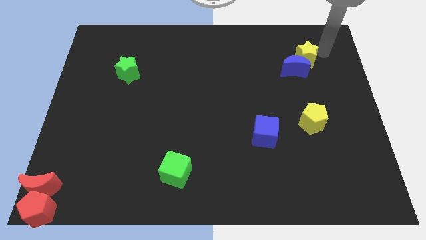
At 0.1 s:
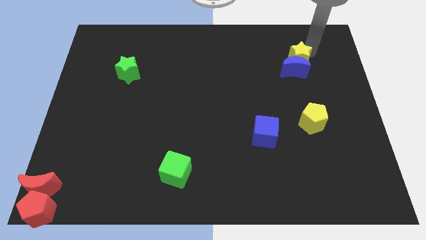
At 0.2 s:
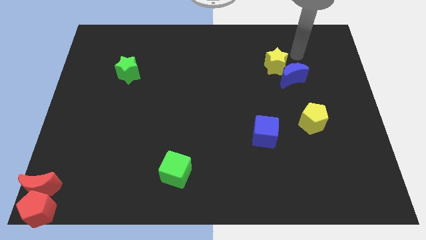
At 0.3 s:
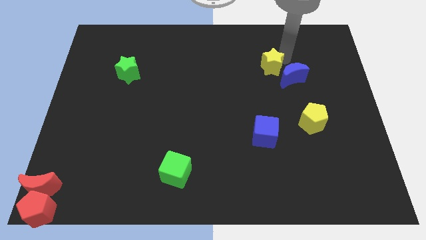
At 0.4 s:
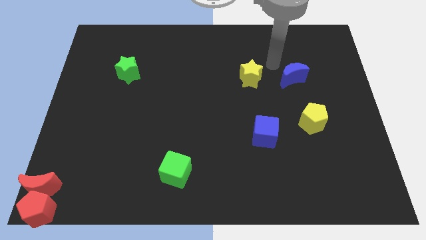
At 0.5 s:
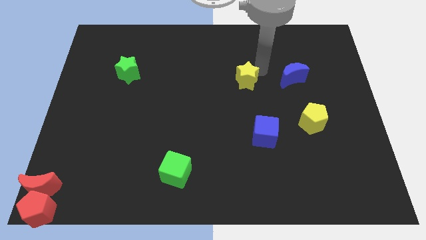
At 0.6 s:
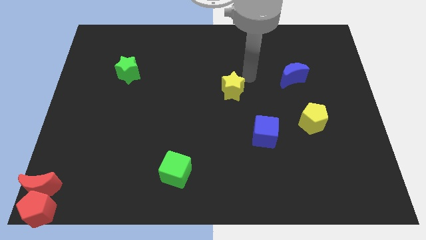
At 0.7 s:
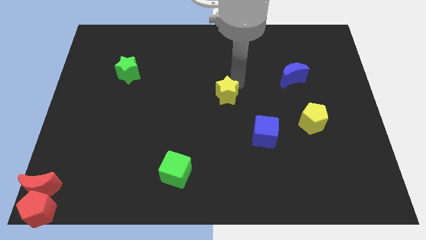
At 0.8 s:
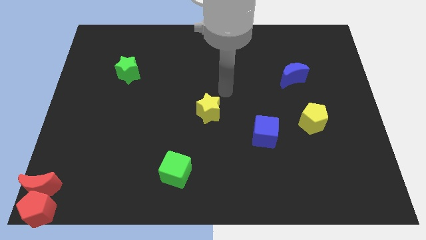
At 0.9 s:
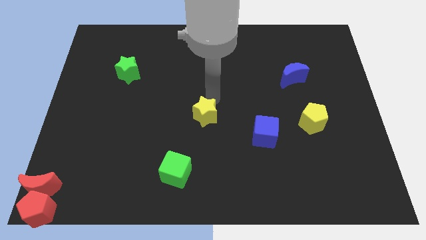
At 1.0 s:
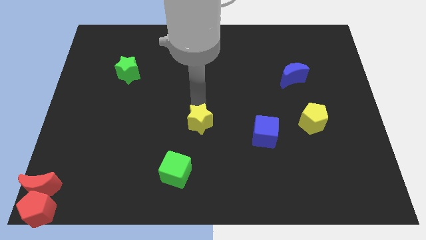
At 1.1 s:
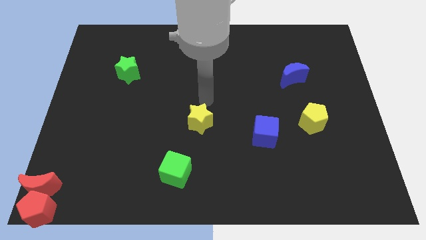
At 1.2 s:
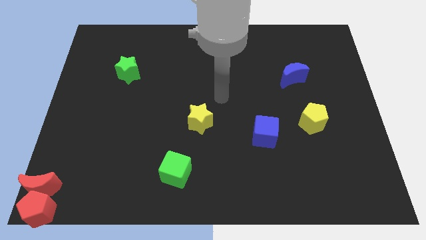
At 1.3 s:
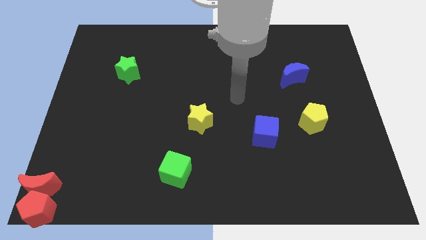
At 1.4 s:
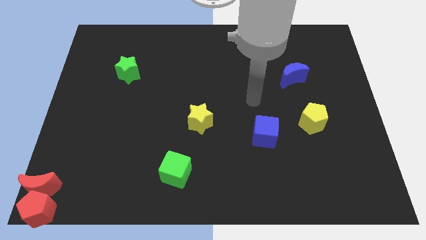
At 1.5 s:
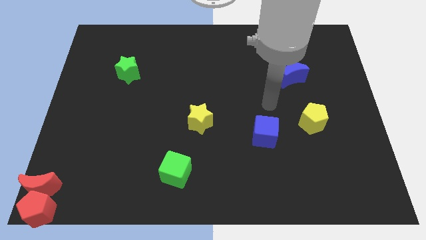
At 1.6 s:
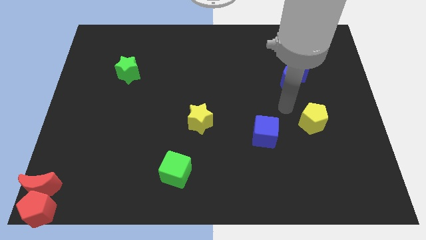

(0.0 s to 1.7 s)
place the yellow star to the center

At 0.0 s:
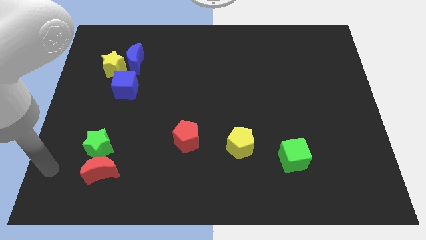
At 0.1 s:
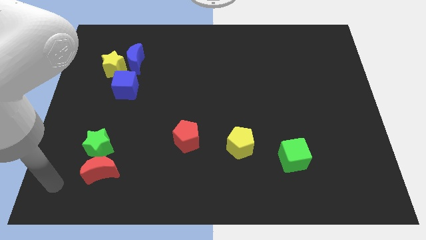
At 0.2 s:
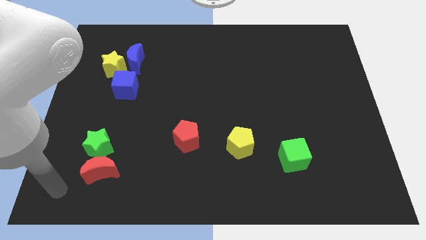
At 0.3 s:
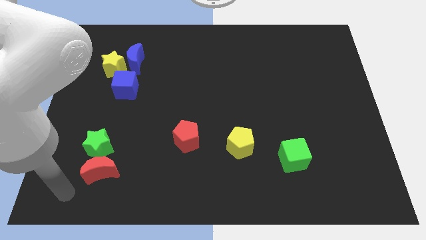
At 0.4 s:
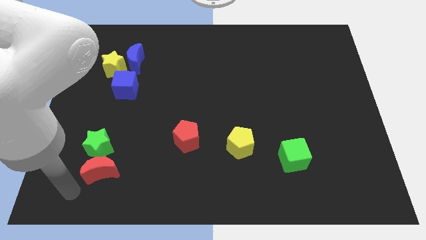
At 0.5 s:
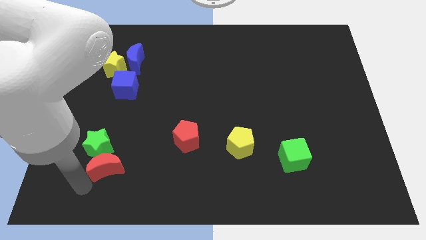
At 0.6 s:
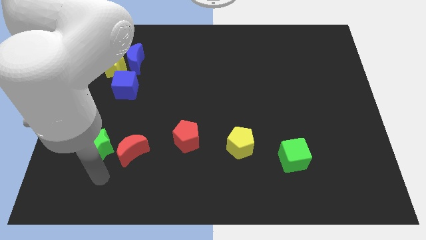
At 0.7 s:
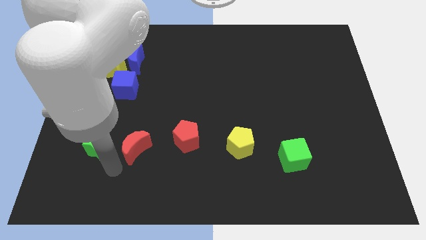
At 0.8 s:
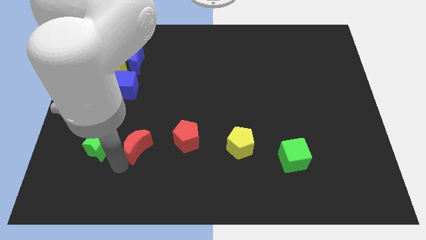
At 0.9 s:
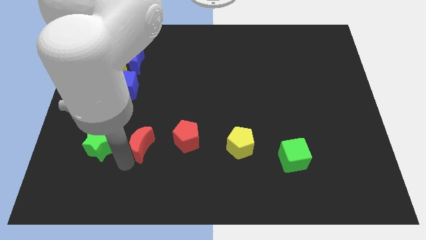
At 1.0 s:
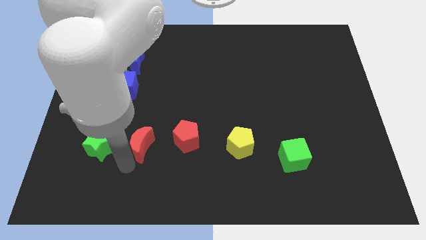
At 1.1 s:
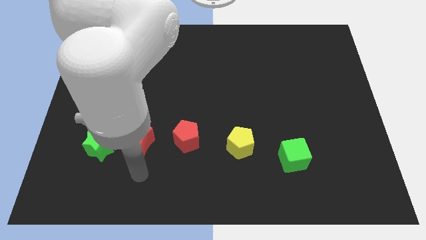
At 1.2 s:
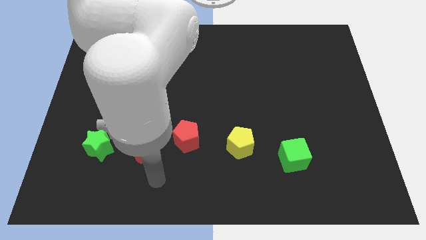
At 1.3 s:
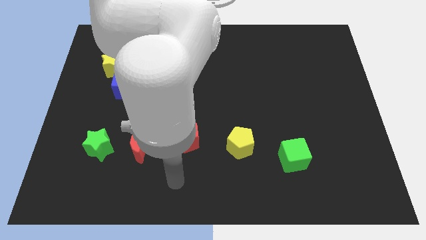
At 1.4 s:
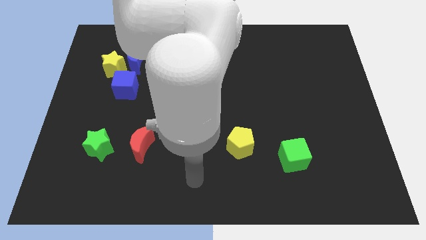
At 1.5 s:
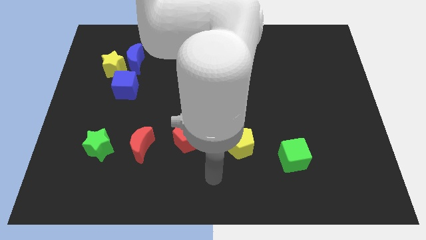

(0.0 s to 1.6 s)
slide the red moon to the right side of the green star

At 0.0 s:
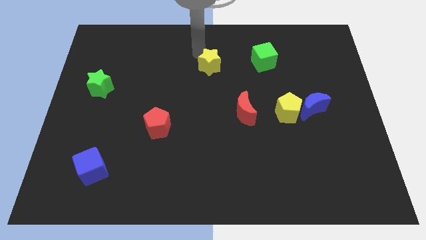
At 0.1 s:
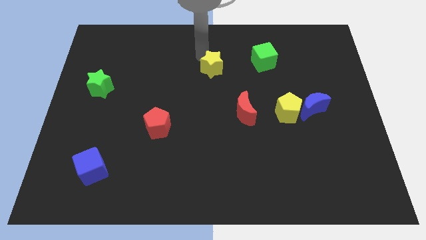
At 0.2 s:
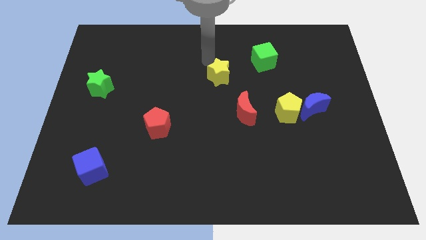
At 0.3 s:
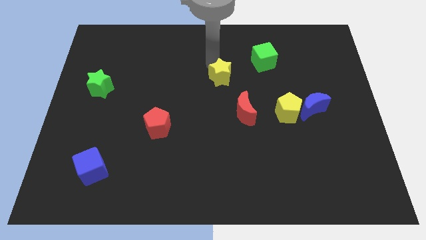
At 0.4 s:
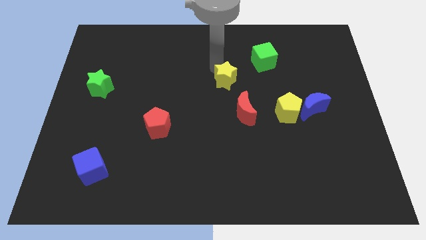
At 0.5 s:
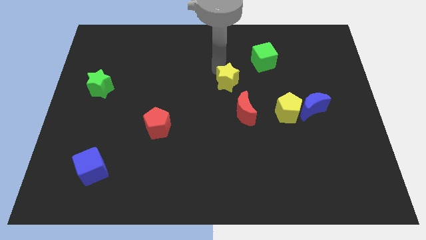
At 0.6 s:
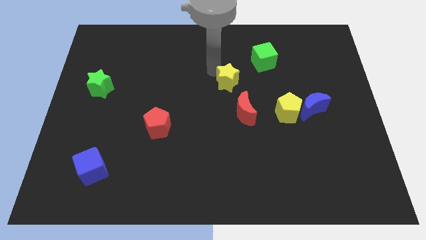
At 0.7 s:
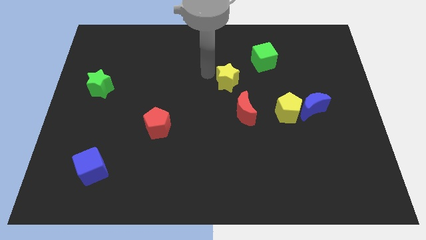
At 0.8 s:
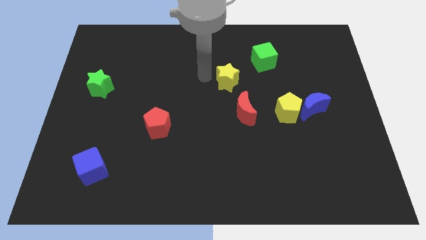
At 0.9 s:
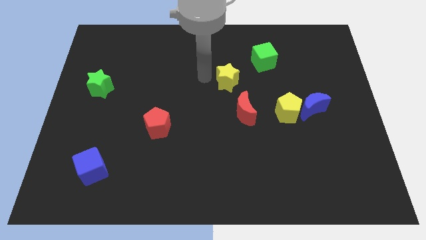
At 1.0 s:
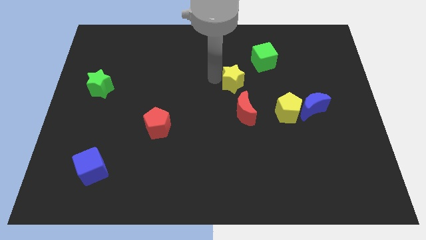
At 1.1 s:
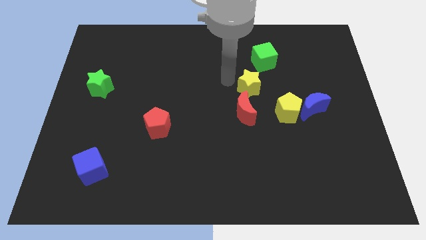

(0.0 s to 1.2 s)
place the yellow star vertically above the red moon

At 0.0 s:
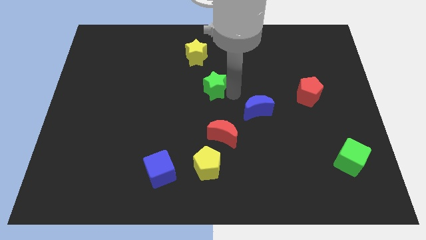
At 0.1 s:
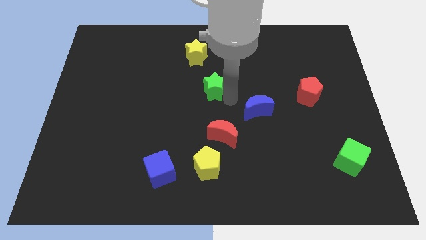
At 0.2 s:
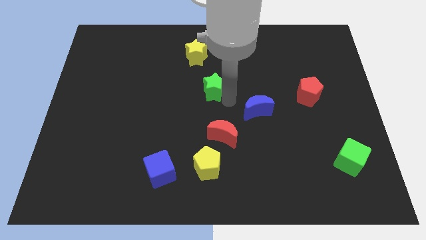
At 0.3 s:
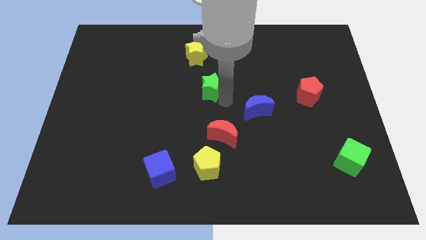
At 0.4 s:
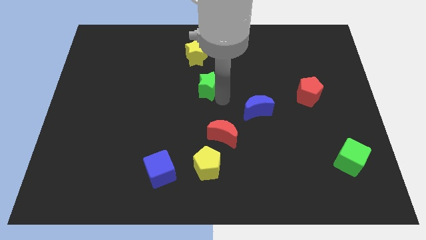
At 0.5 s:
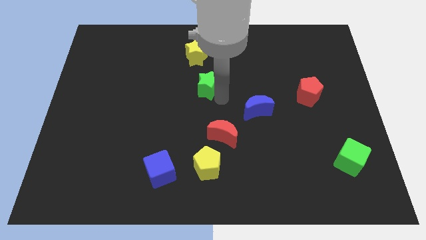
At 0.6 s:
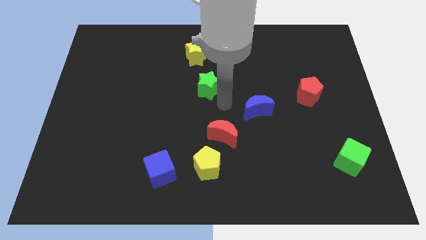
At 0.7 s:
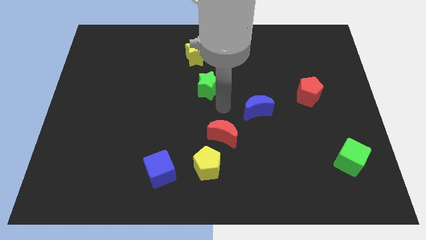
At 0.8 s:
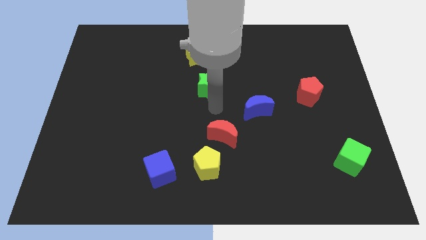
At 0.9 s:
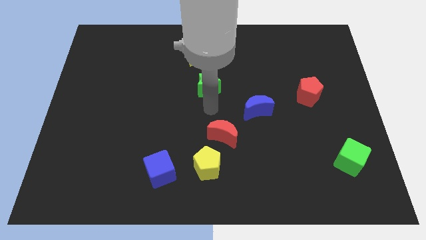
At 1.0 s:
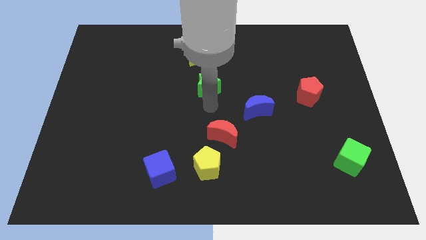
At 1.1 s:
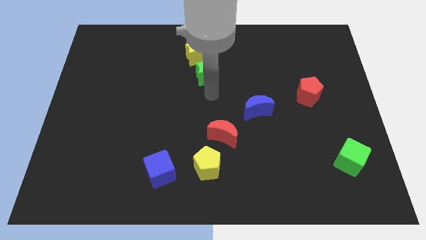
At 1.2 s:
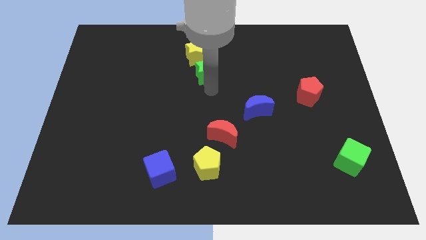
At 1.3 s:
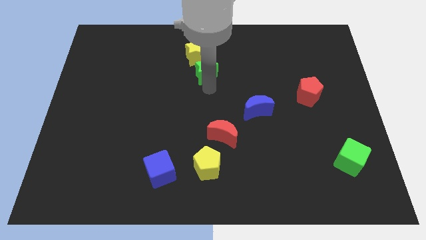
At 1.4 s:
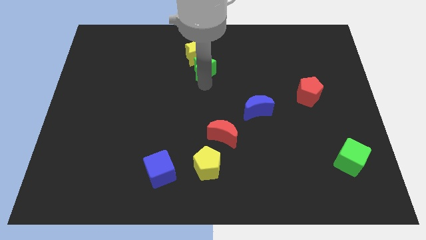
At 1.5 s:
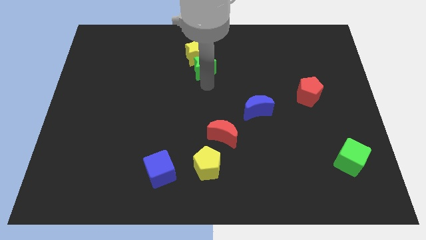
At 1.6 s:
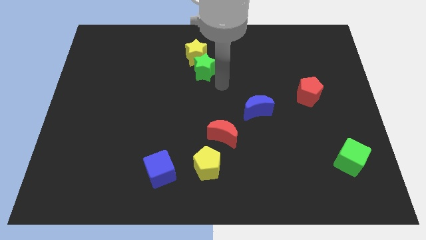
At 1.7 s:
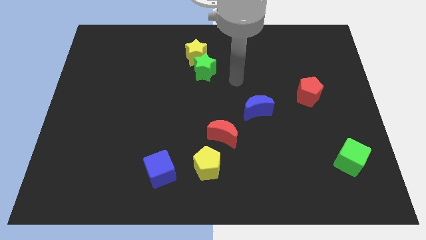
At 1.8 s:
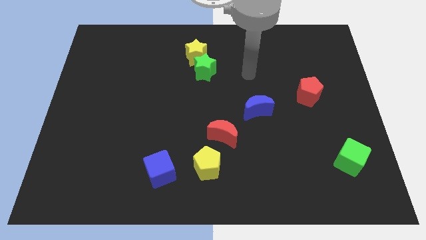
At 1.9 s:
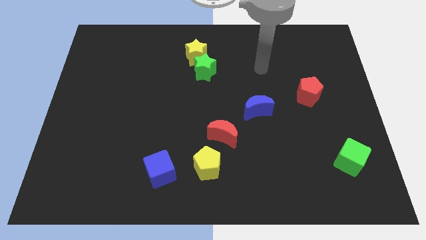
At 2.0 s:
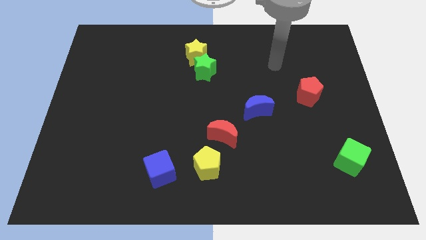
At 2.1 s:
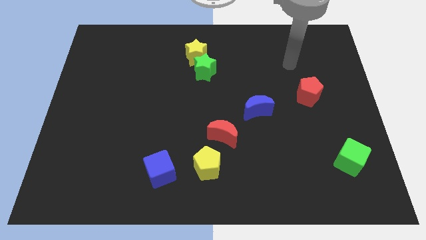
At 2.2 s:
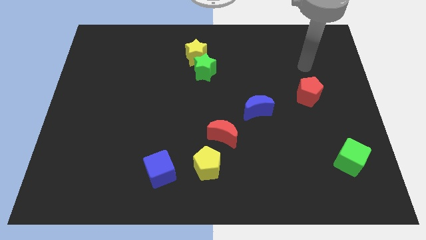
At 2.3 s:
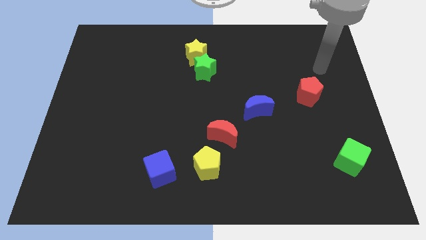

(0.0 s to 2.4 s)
push the green star close to yellow star

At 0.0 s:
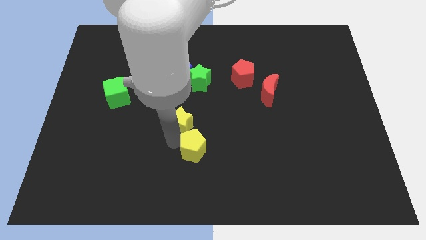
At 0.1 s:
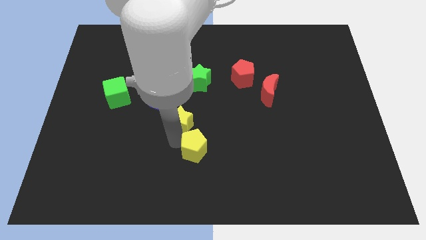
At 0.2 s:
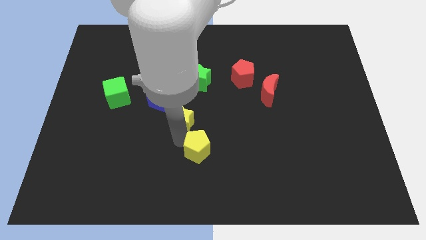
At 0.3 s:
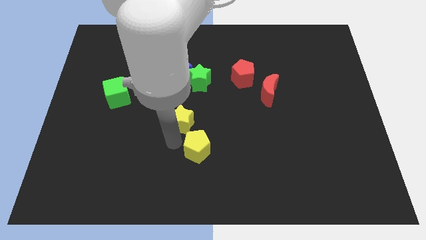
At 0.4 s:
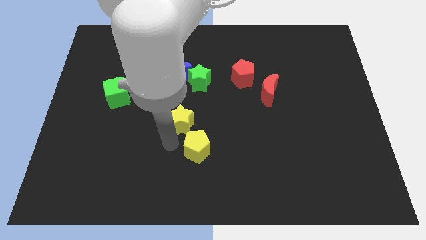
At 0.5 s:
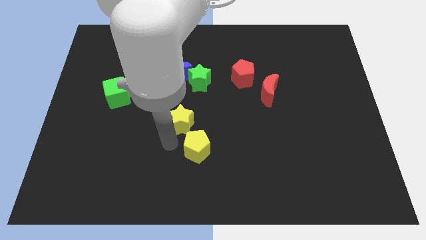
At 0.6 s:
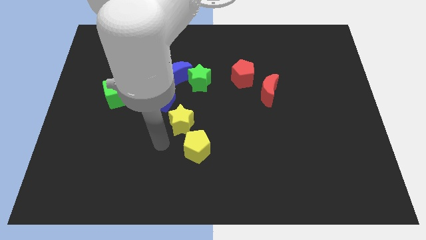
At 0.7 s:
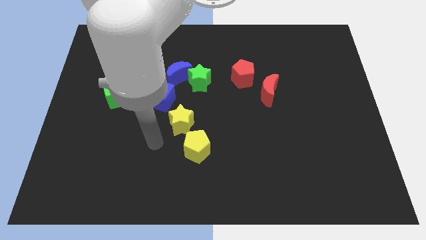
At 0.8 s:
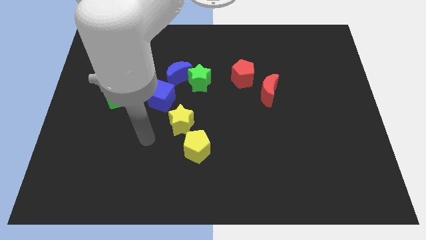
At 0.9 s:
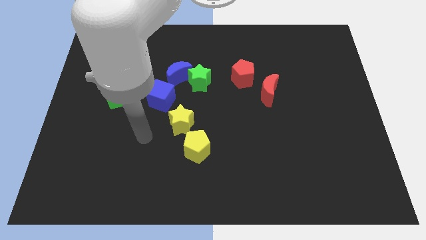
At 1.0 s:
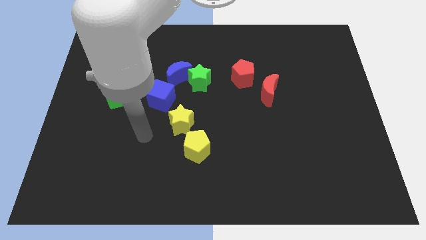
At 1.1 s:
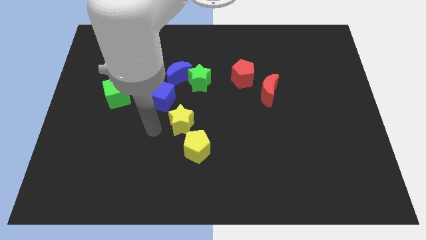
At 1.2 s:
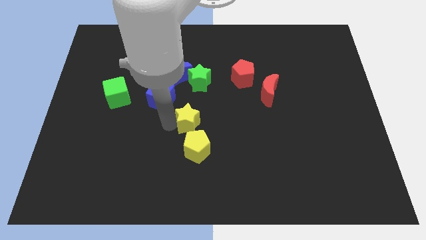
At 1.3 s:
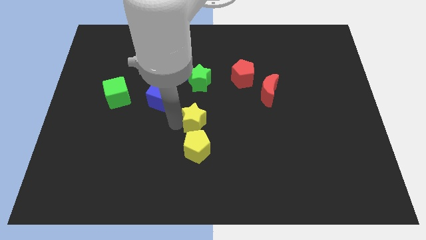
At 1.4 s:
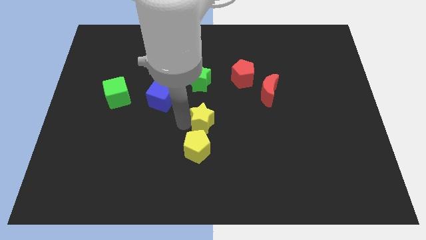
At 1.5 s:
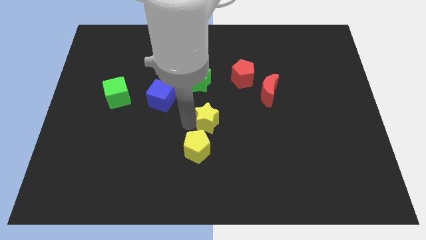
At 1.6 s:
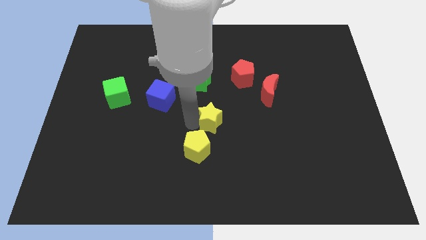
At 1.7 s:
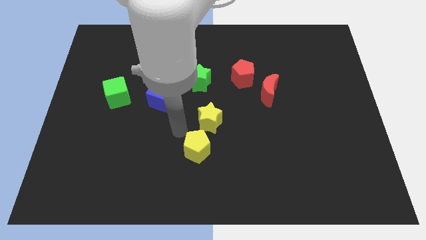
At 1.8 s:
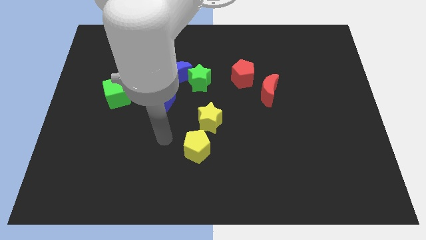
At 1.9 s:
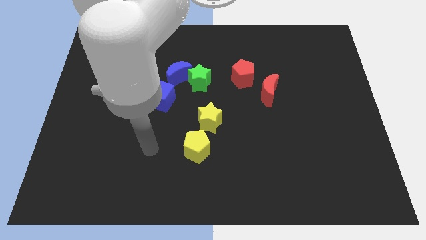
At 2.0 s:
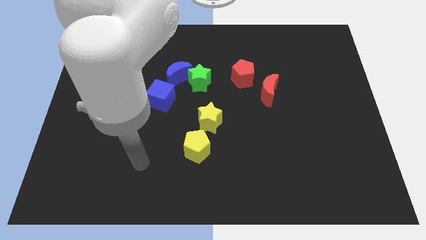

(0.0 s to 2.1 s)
push the yellow star above the yellow pentagon
